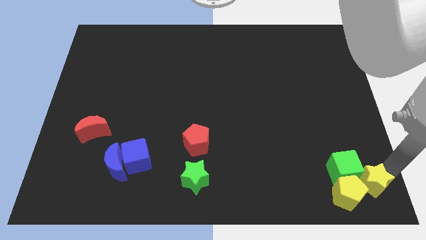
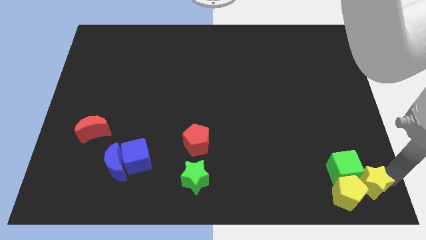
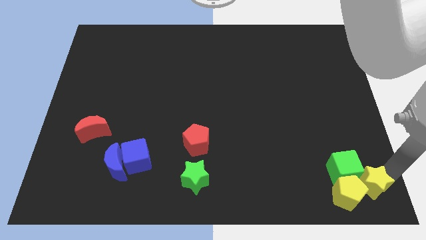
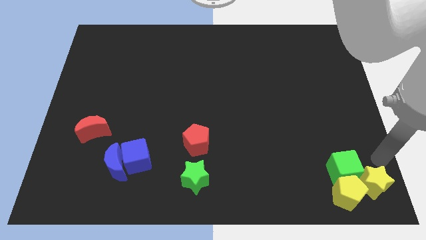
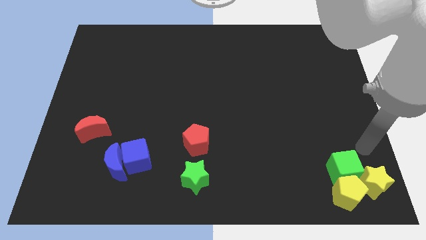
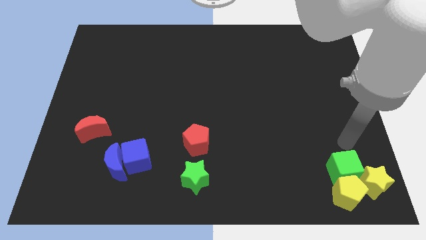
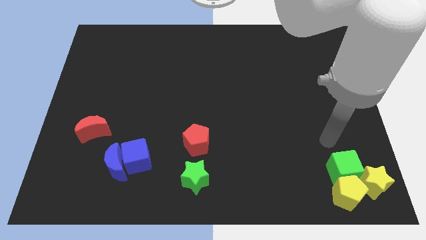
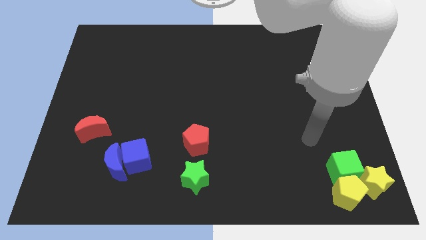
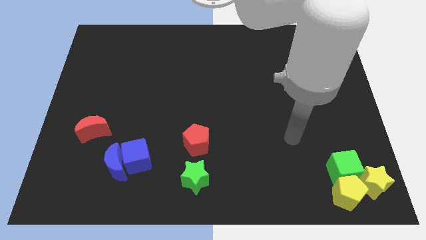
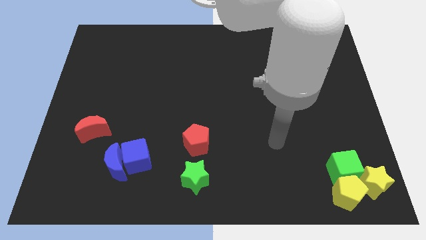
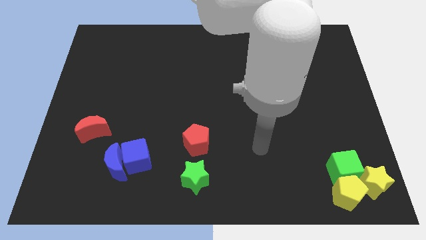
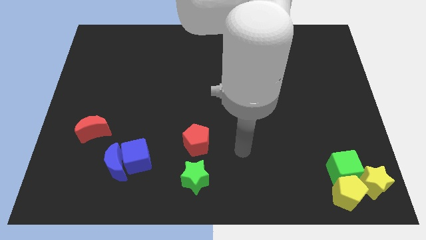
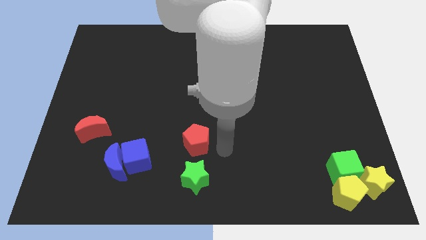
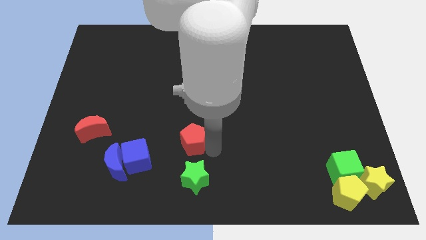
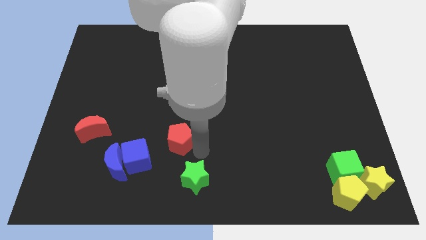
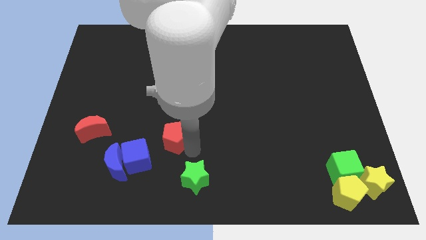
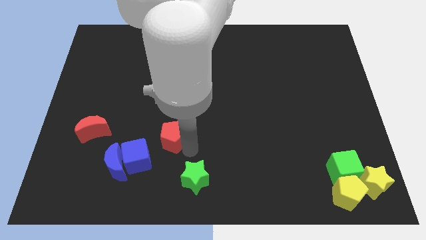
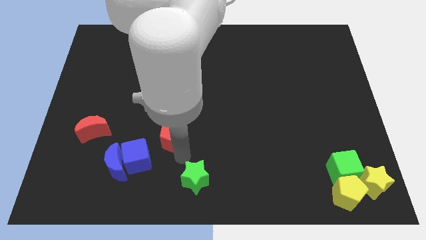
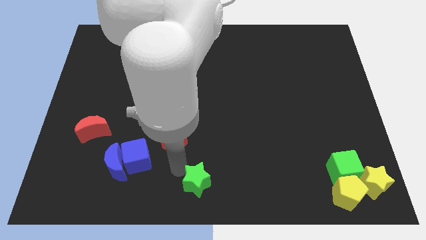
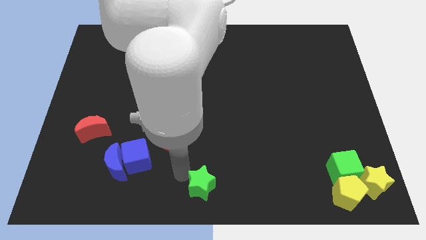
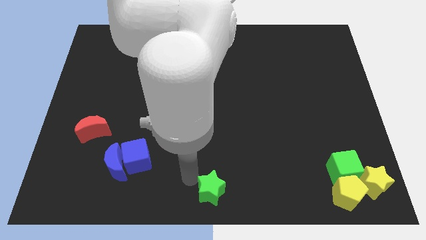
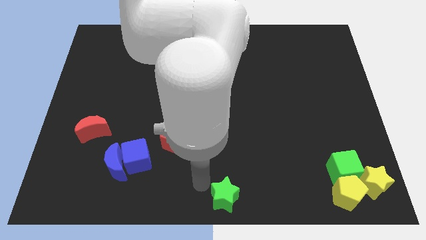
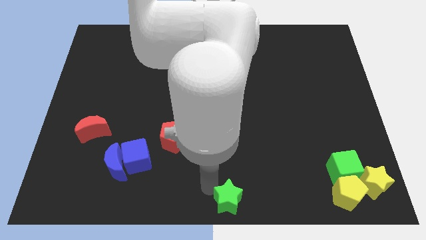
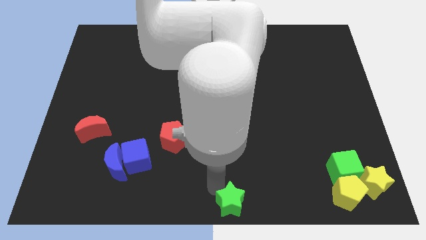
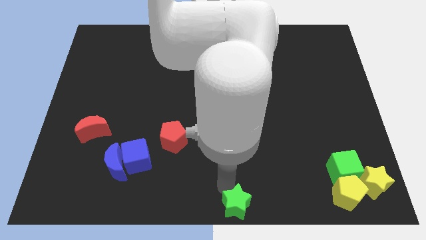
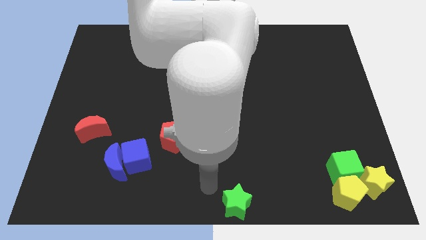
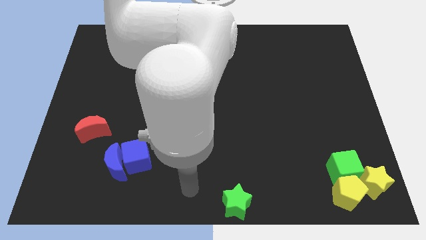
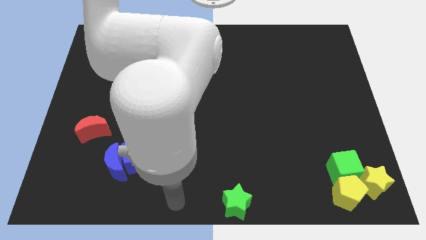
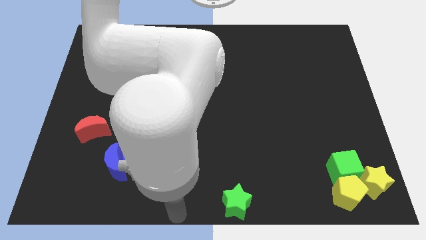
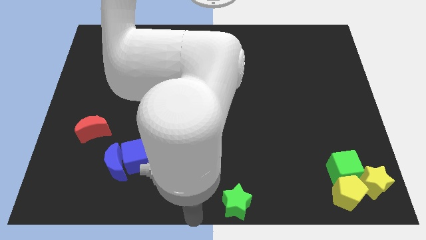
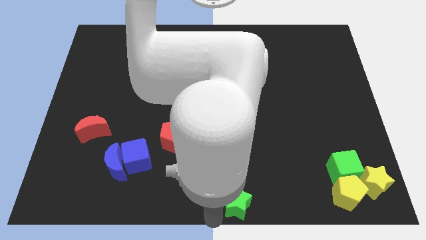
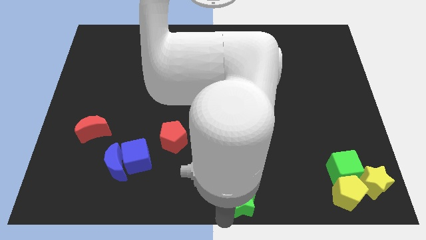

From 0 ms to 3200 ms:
place green star towards down middle end of the board

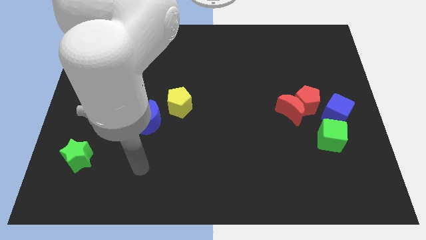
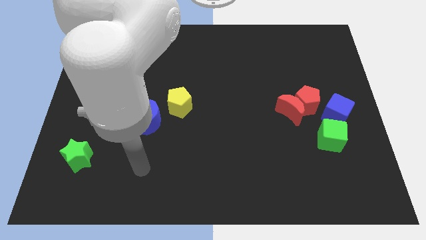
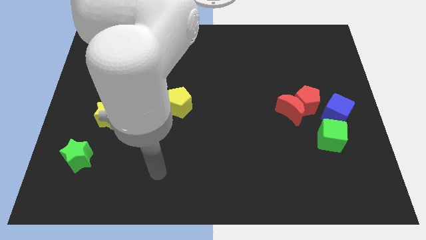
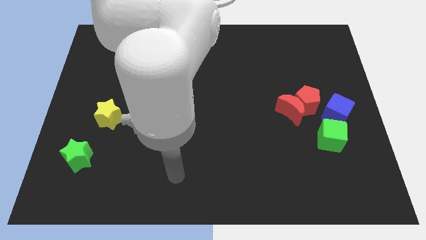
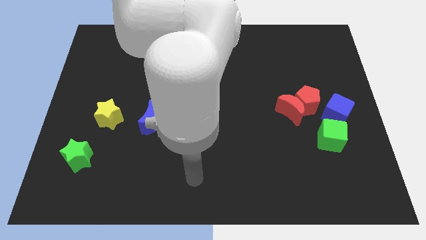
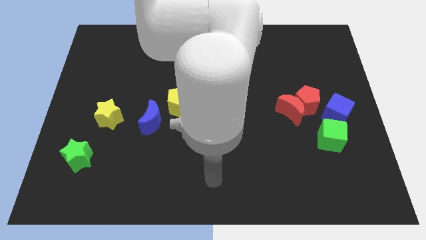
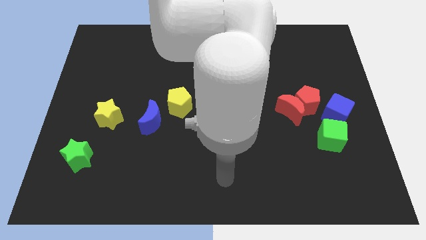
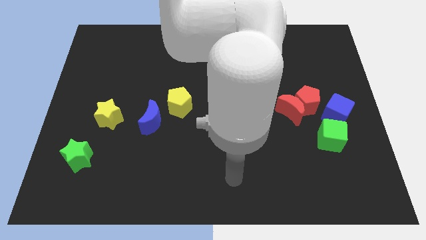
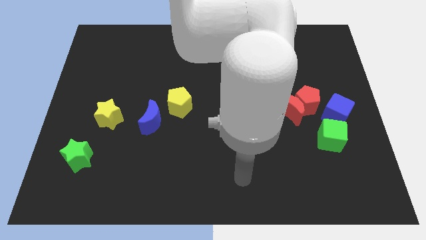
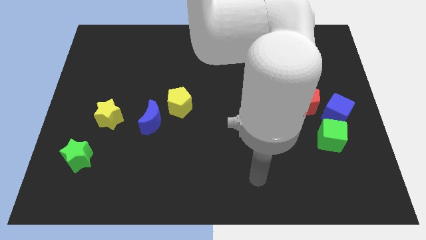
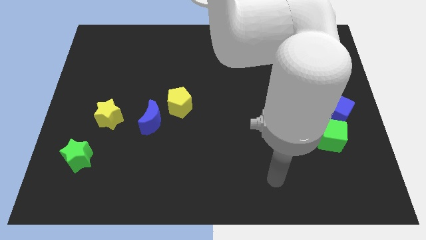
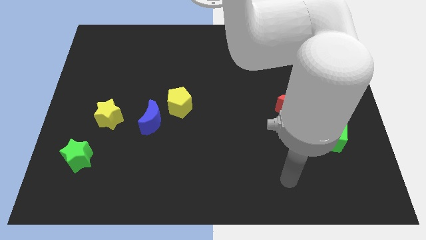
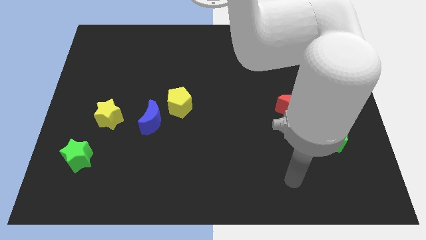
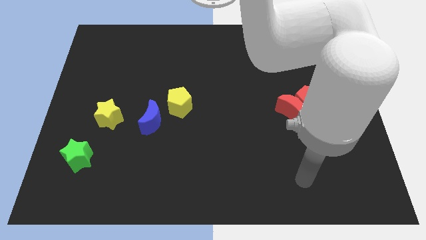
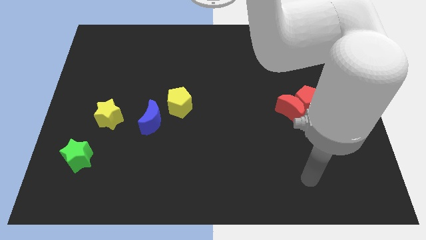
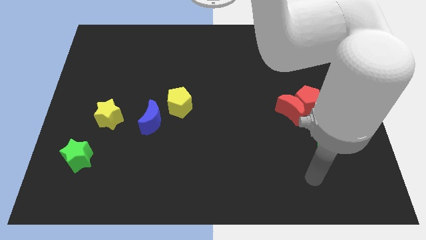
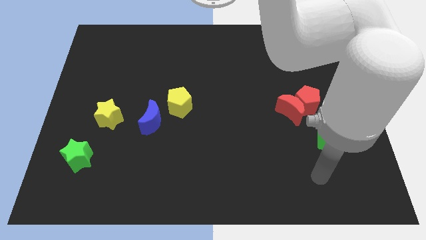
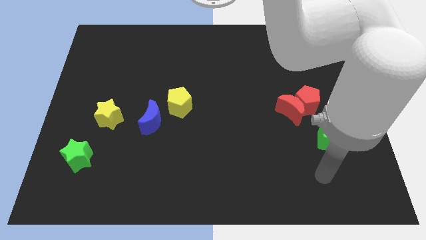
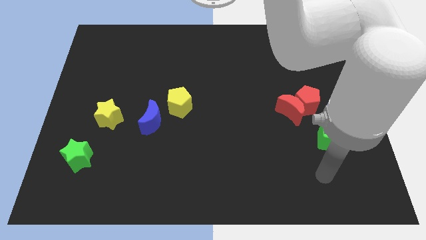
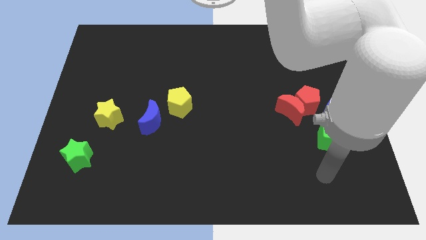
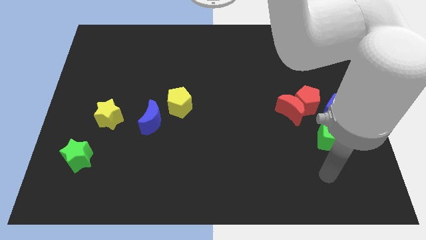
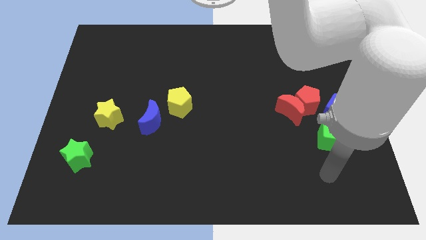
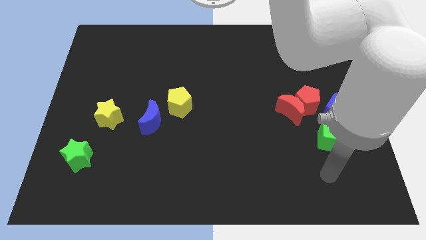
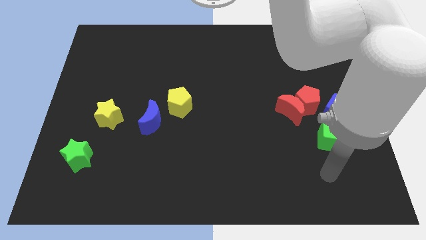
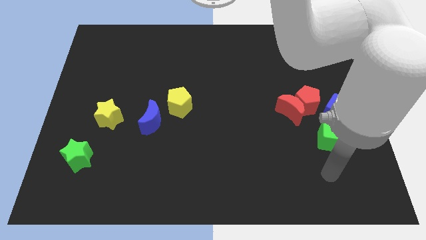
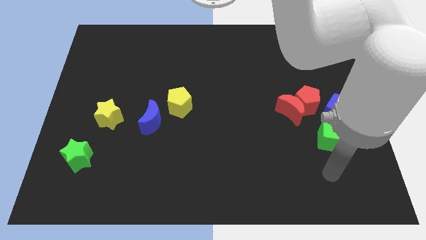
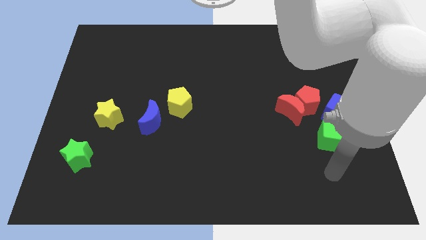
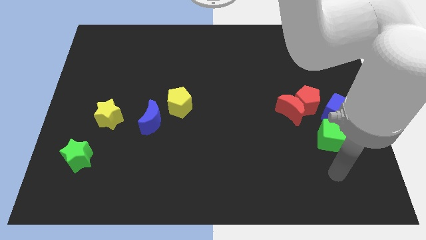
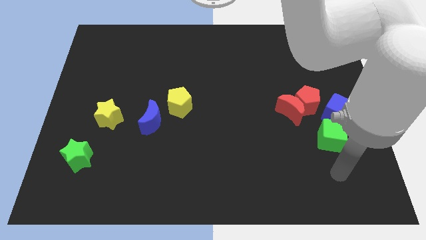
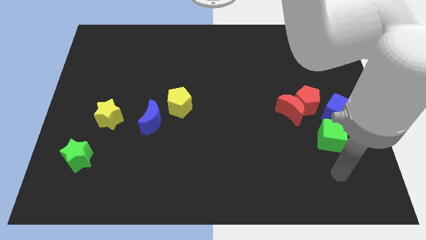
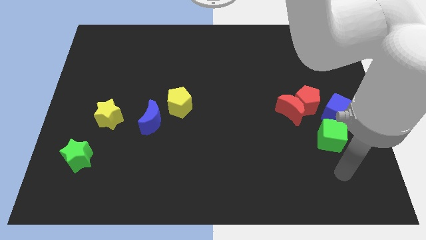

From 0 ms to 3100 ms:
move the arm to the bottom right of the board

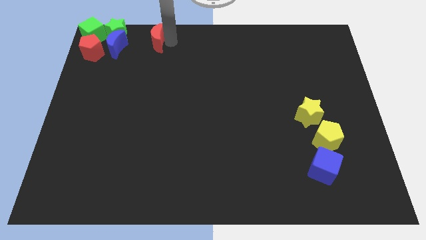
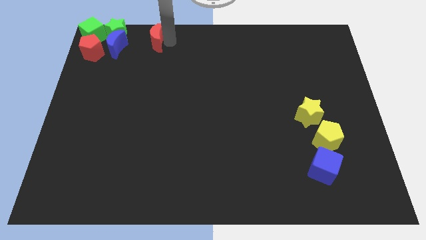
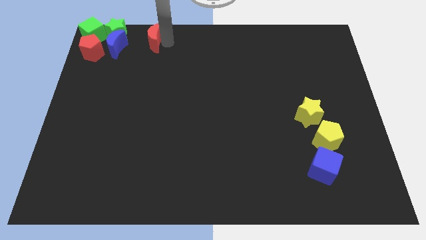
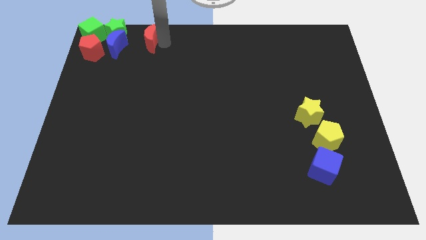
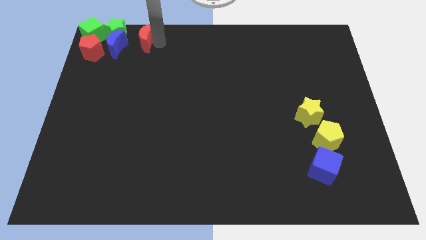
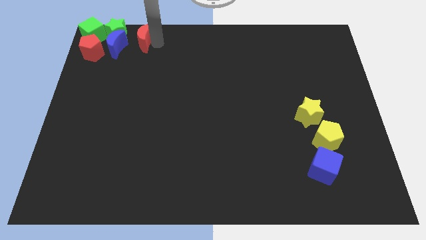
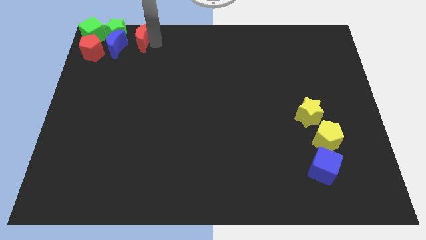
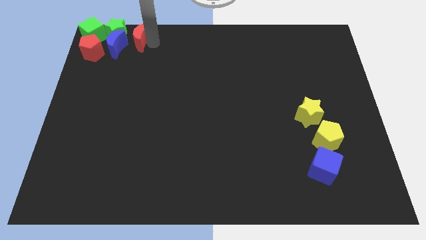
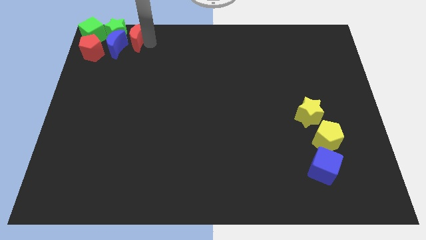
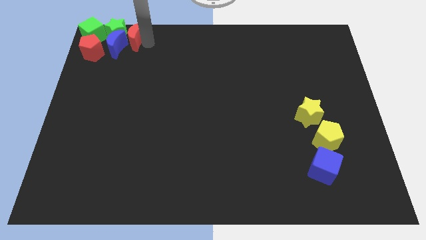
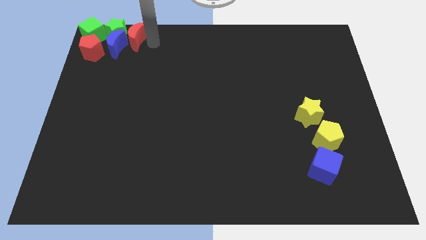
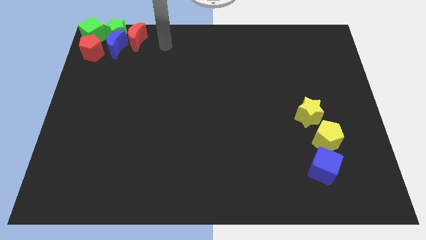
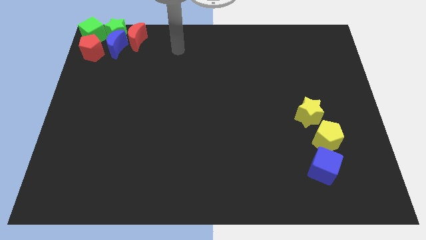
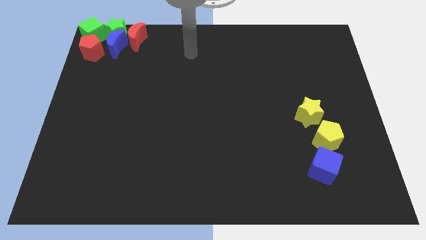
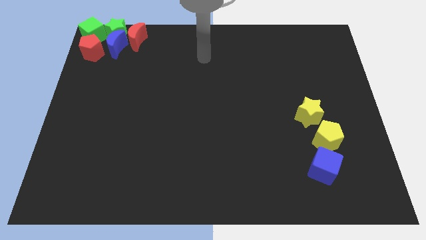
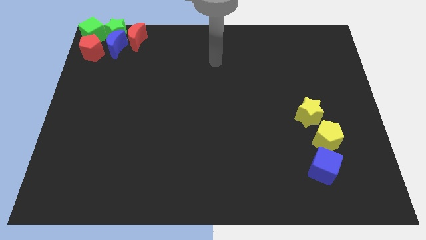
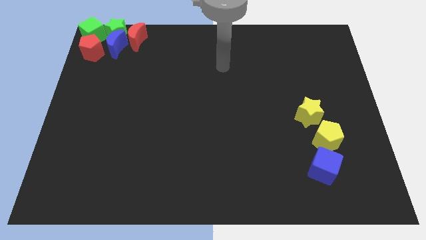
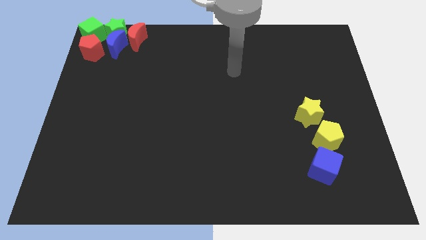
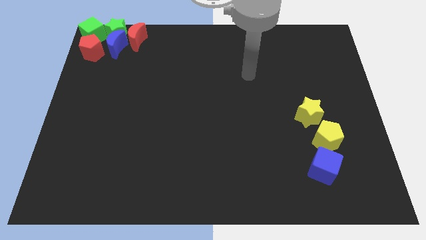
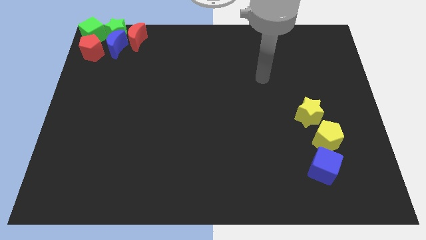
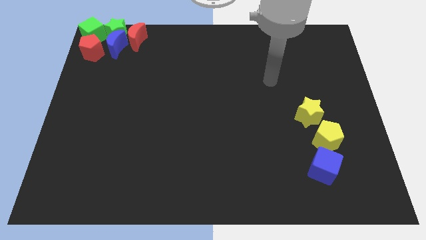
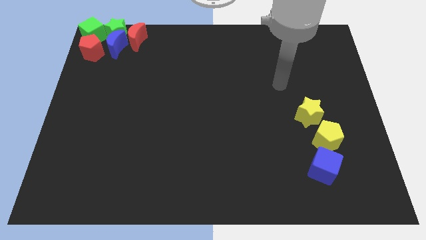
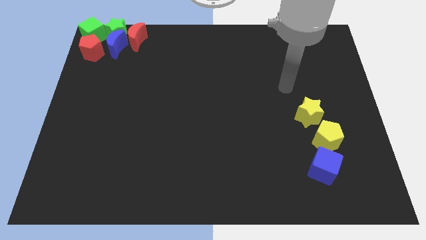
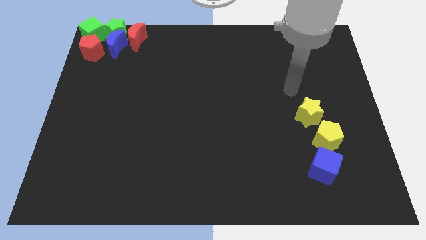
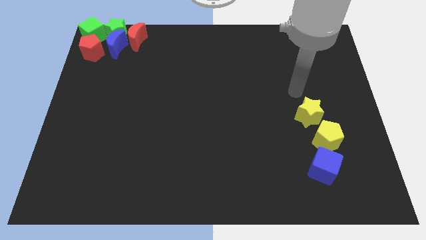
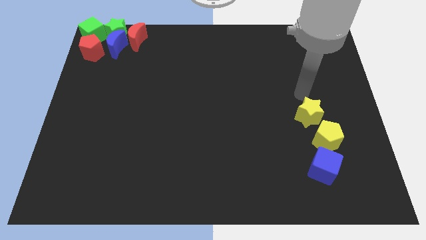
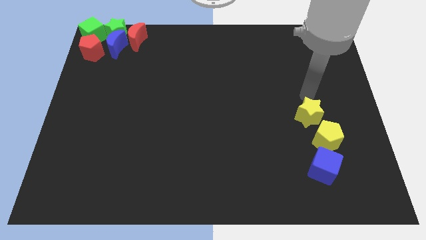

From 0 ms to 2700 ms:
add the red crescent to the group of the block at the top left corner of the board
